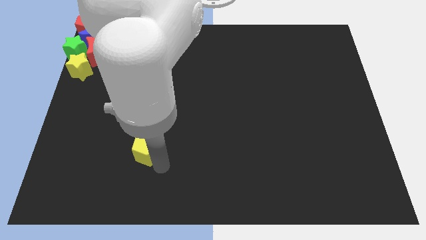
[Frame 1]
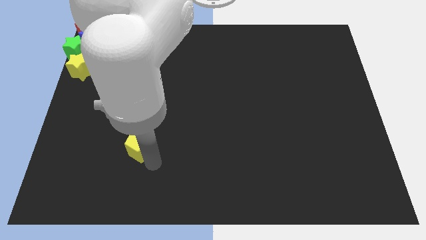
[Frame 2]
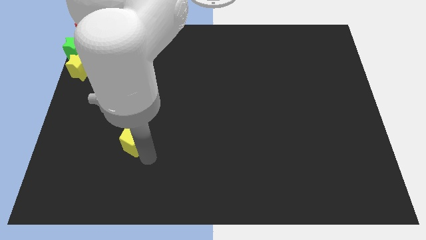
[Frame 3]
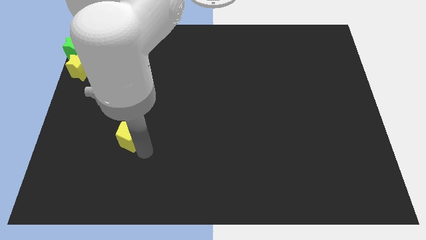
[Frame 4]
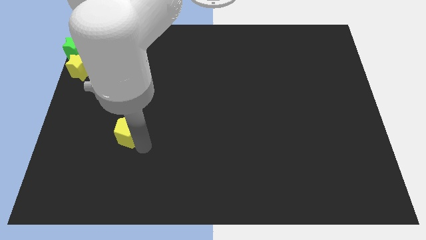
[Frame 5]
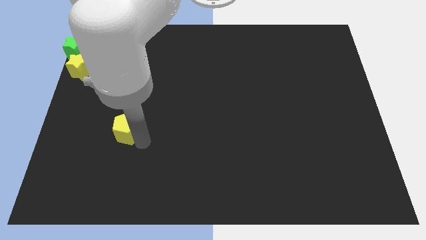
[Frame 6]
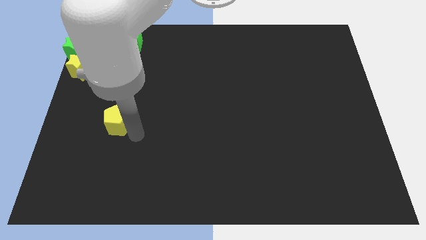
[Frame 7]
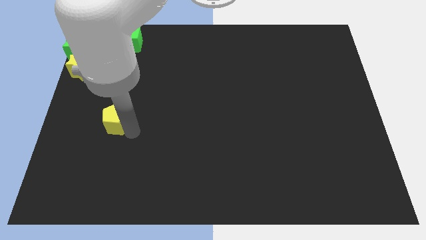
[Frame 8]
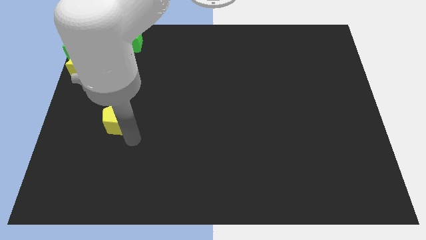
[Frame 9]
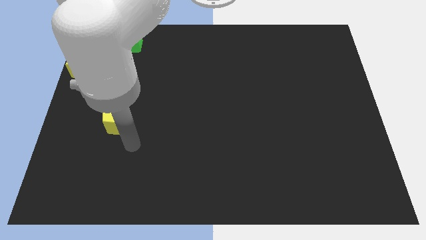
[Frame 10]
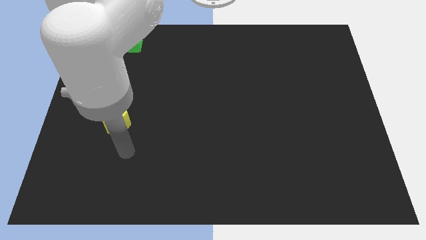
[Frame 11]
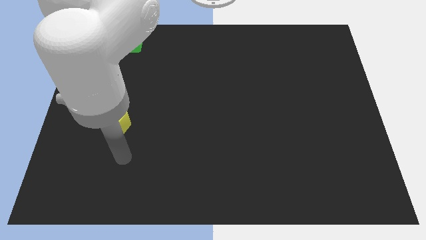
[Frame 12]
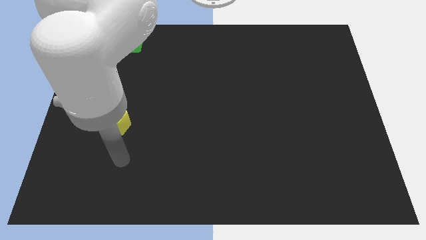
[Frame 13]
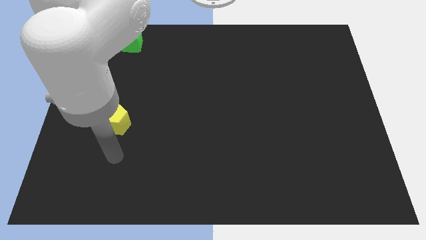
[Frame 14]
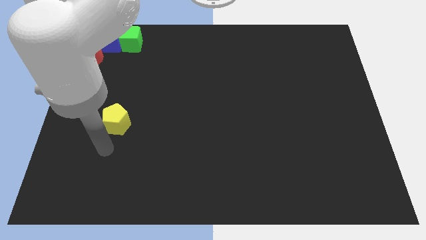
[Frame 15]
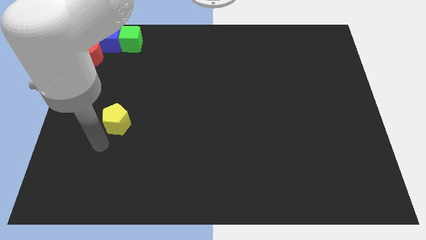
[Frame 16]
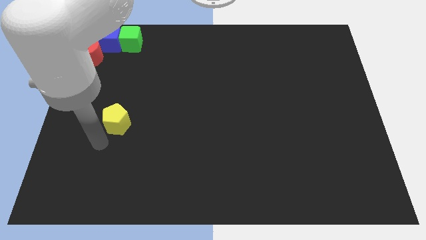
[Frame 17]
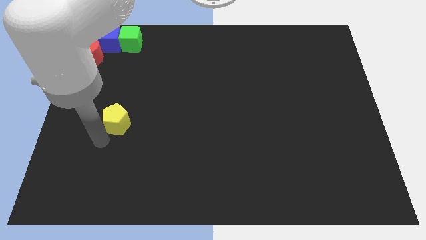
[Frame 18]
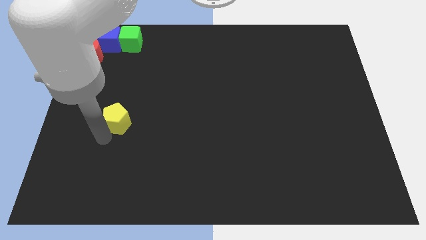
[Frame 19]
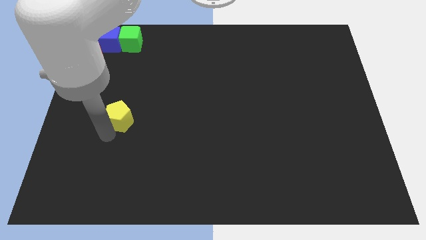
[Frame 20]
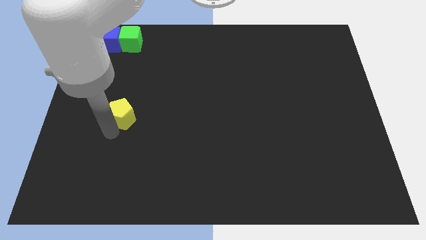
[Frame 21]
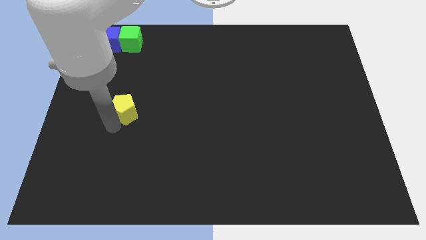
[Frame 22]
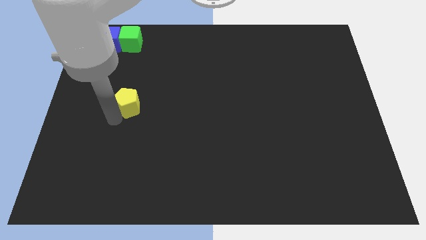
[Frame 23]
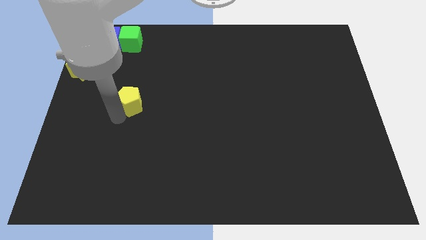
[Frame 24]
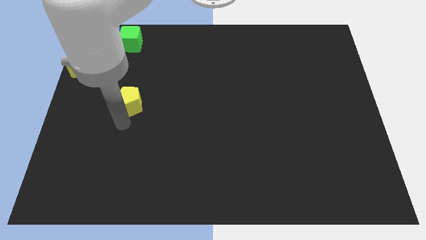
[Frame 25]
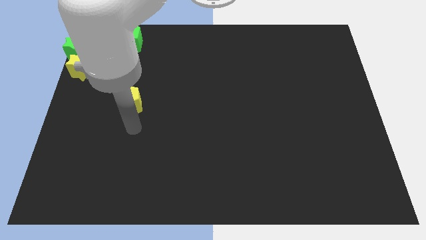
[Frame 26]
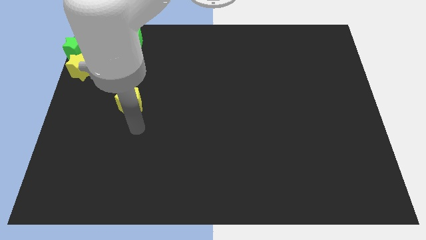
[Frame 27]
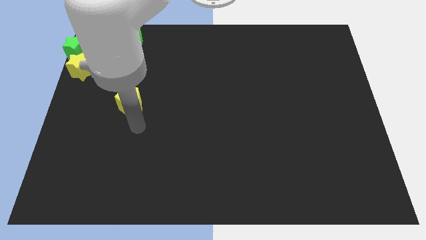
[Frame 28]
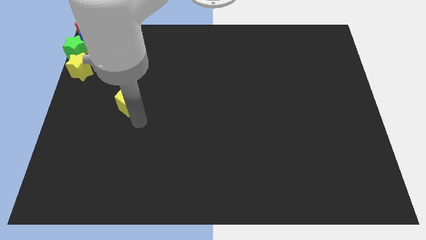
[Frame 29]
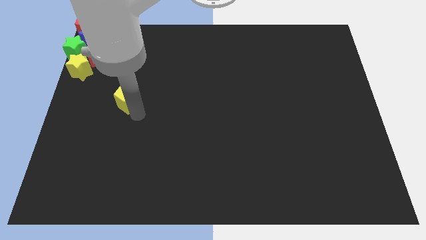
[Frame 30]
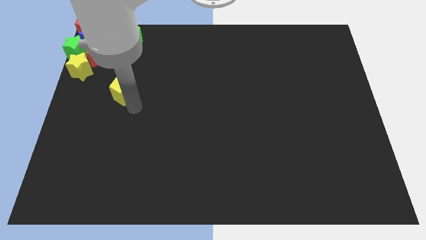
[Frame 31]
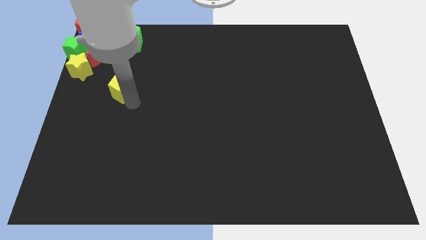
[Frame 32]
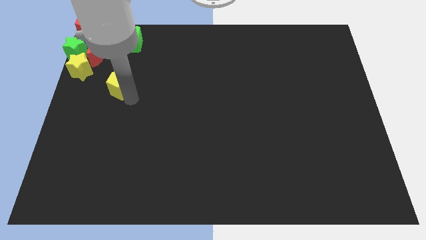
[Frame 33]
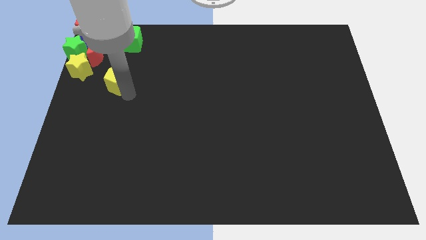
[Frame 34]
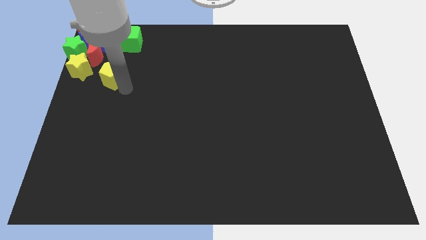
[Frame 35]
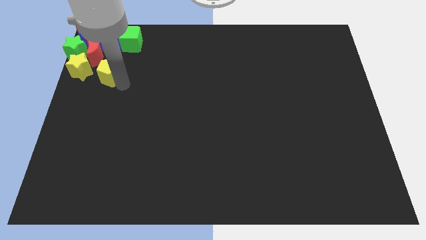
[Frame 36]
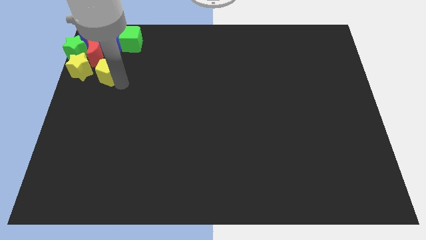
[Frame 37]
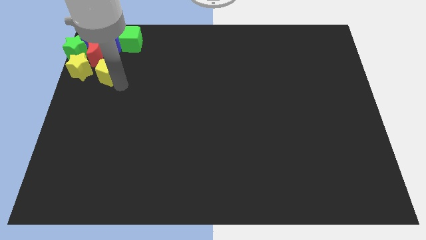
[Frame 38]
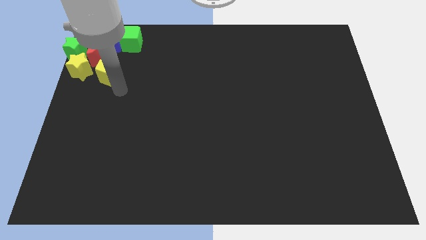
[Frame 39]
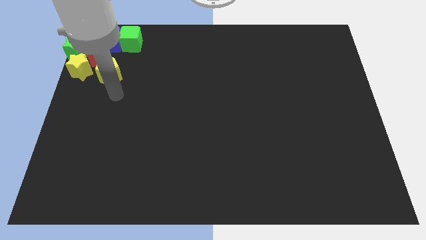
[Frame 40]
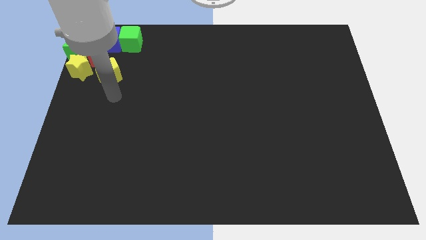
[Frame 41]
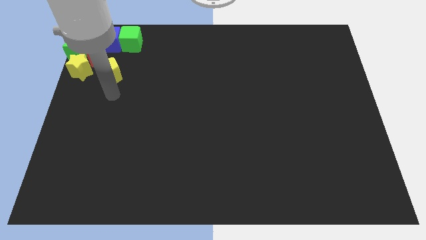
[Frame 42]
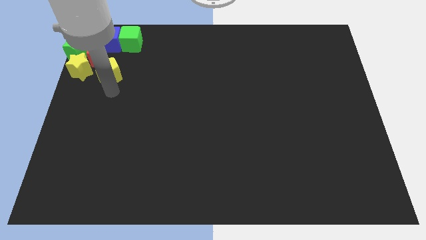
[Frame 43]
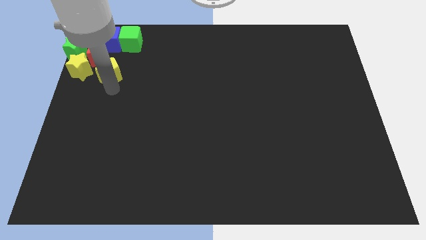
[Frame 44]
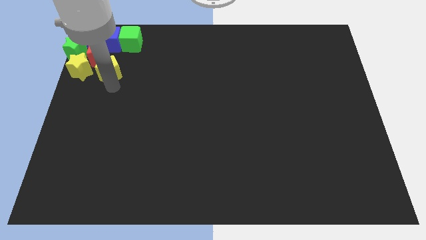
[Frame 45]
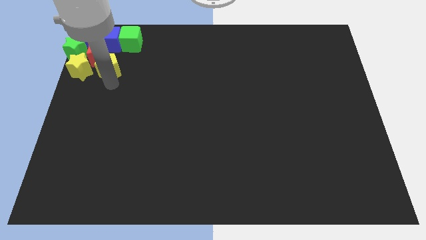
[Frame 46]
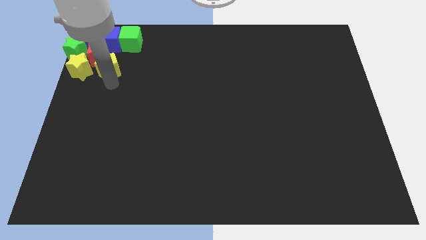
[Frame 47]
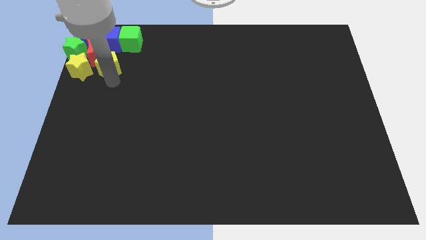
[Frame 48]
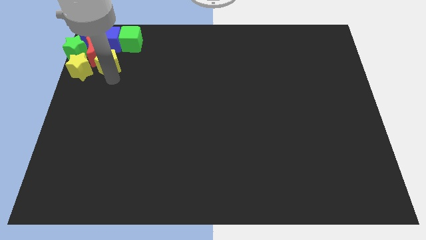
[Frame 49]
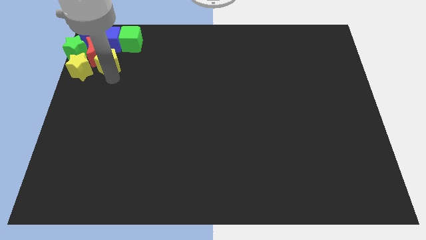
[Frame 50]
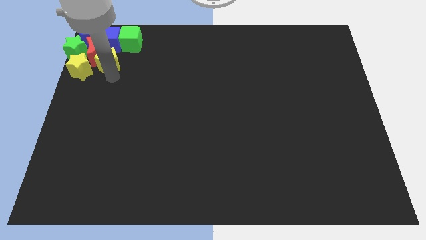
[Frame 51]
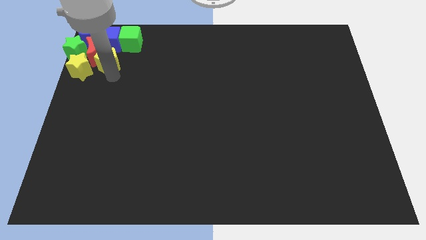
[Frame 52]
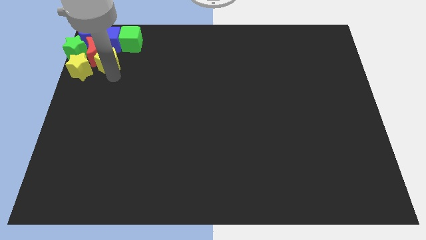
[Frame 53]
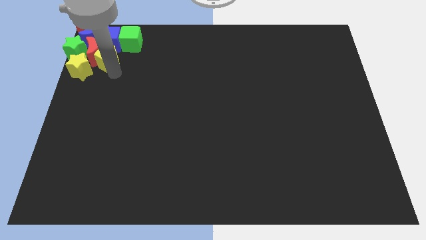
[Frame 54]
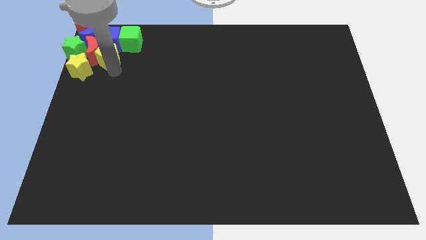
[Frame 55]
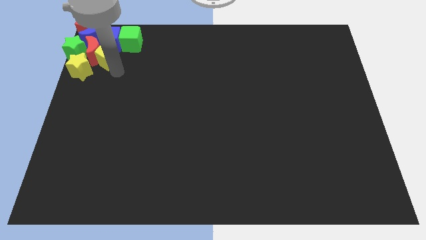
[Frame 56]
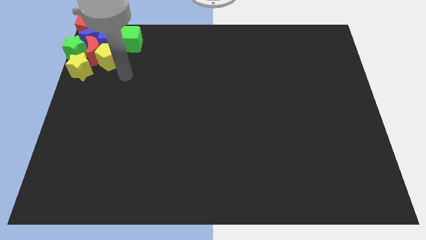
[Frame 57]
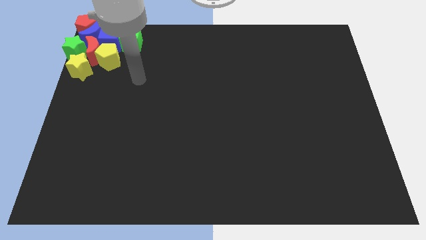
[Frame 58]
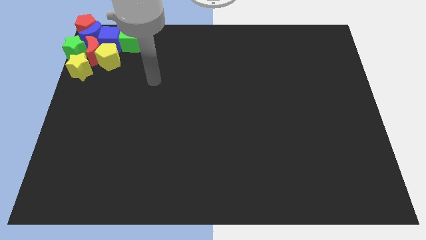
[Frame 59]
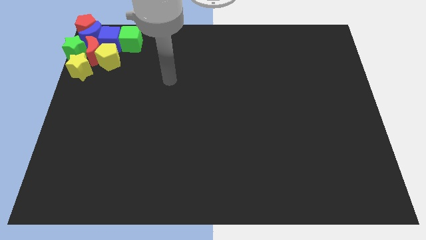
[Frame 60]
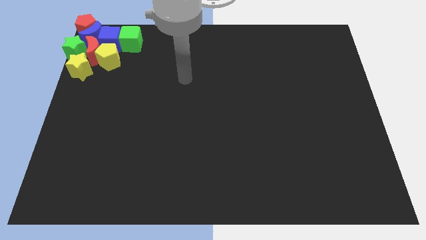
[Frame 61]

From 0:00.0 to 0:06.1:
move the yellow pentagon into the group of blocks

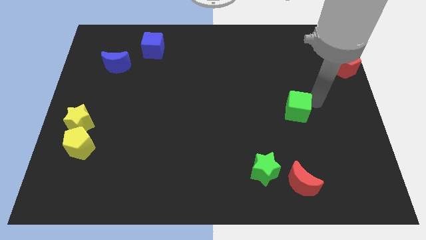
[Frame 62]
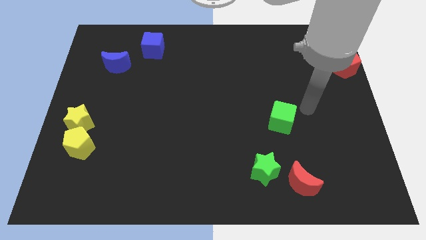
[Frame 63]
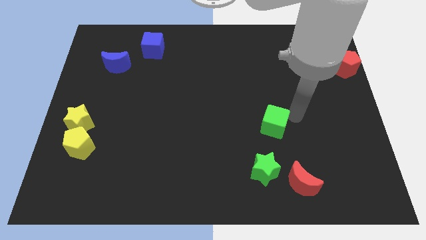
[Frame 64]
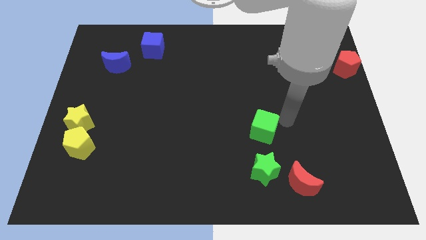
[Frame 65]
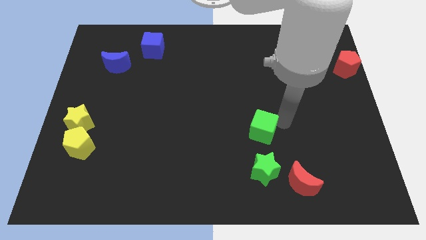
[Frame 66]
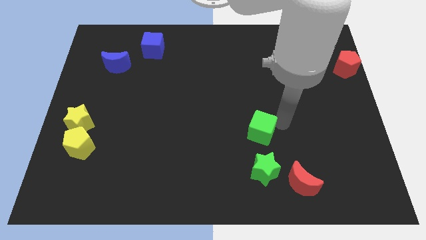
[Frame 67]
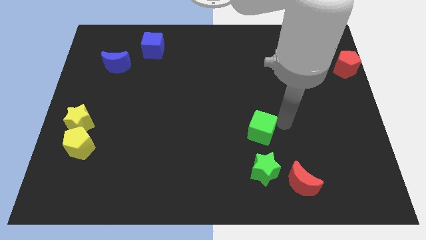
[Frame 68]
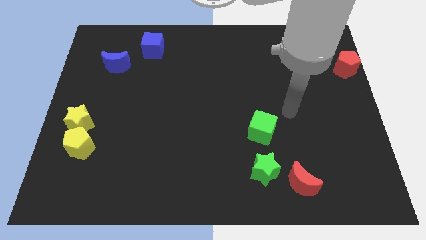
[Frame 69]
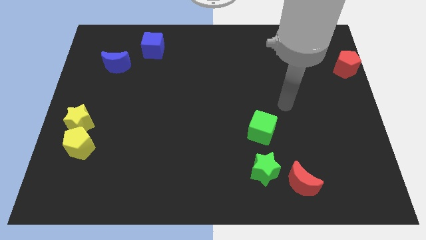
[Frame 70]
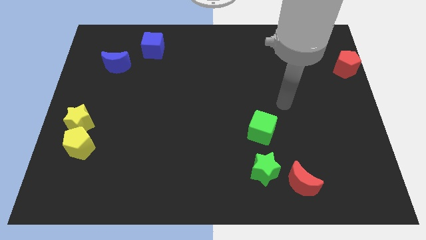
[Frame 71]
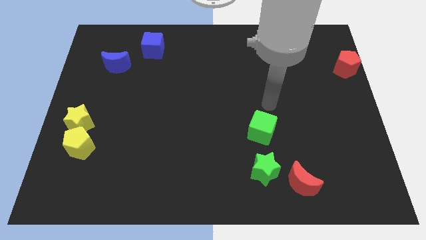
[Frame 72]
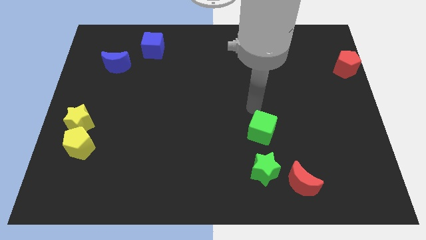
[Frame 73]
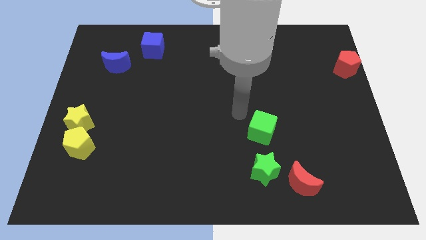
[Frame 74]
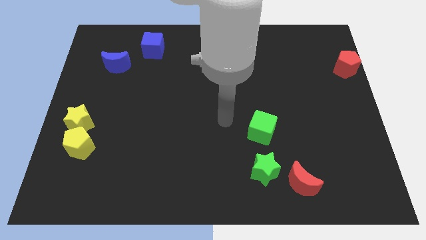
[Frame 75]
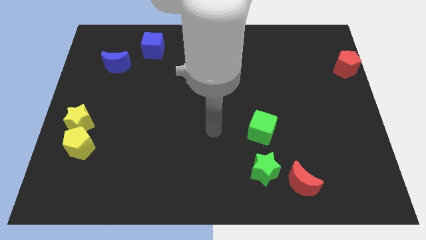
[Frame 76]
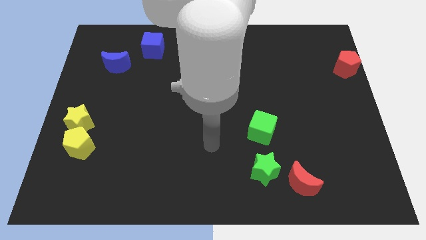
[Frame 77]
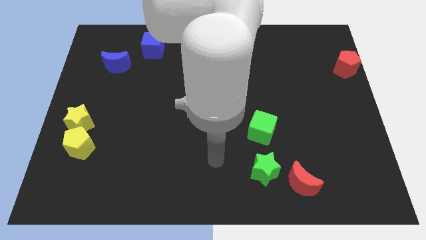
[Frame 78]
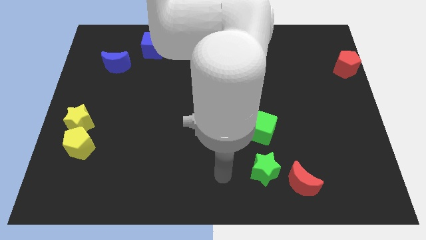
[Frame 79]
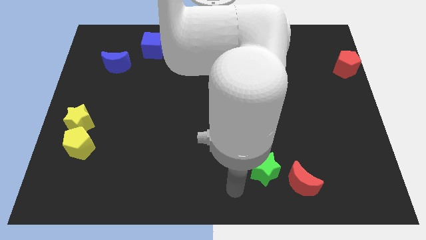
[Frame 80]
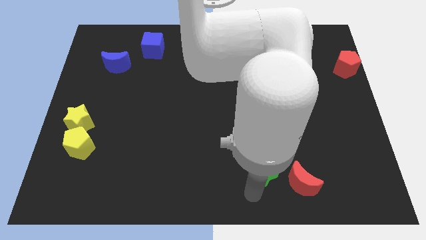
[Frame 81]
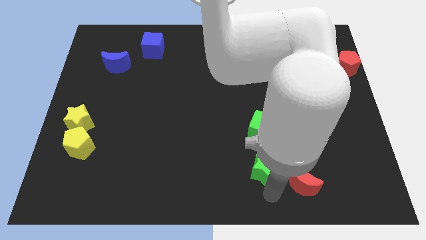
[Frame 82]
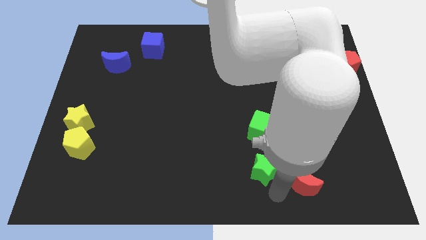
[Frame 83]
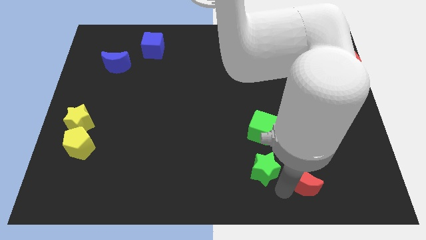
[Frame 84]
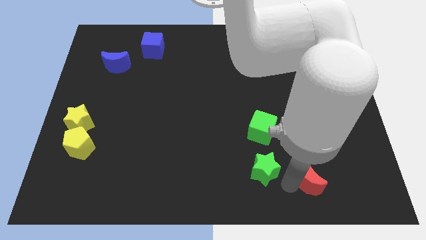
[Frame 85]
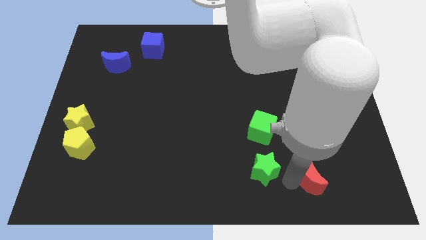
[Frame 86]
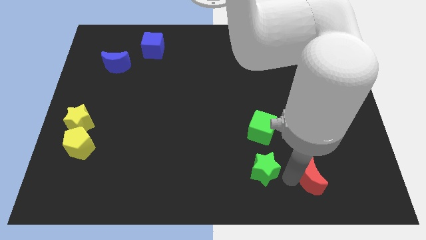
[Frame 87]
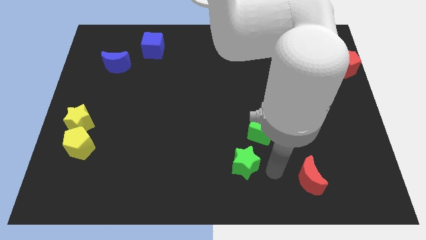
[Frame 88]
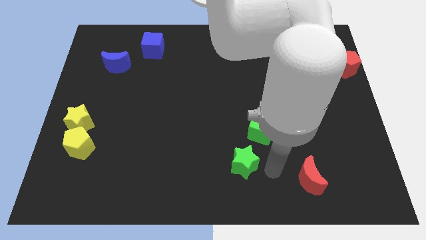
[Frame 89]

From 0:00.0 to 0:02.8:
move the green cube downwards and green star below the green cube

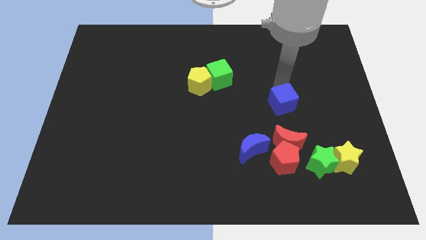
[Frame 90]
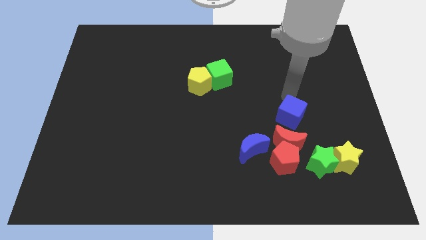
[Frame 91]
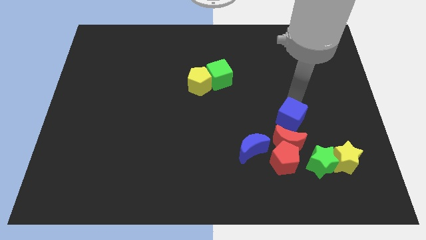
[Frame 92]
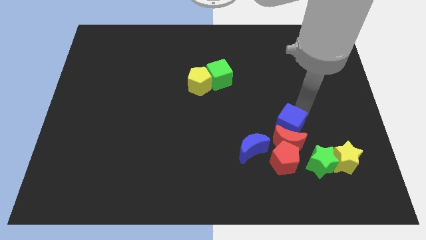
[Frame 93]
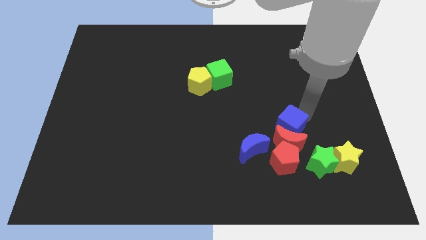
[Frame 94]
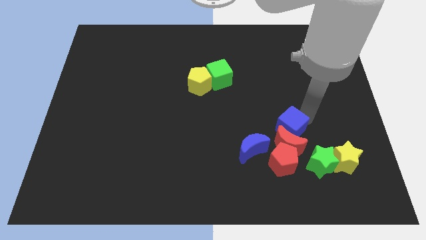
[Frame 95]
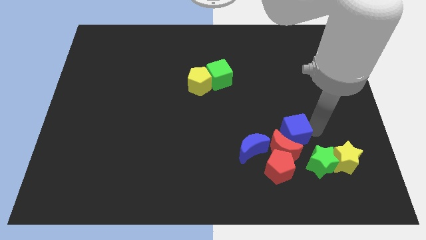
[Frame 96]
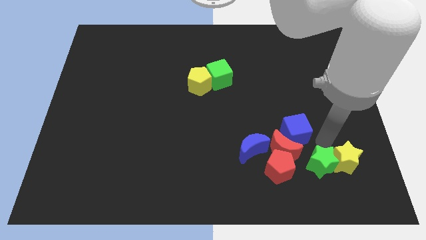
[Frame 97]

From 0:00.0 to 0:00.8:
push the blue cube into the red moon
